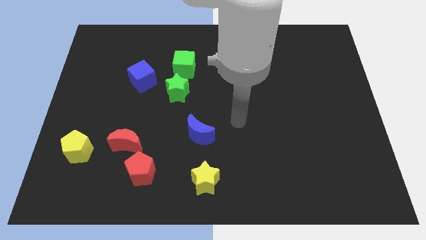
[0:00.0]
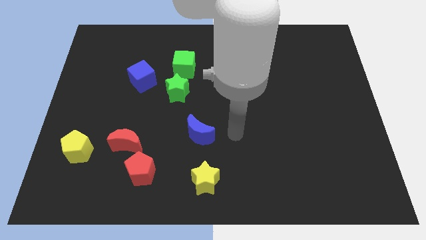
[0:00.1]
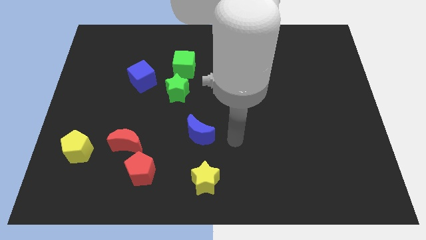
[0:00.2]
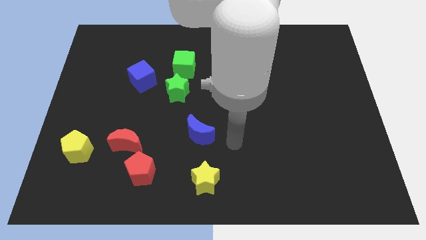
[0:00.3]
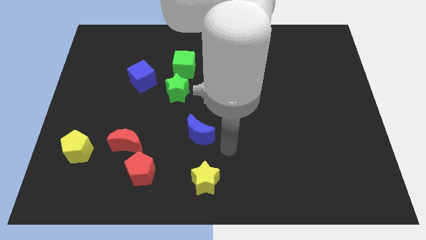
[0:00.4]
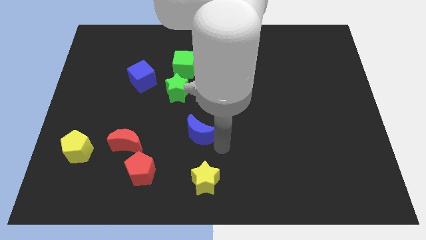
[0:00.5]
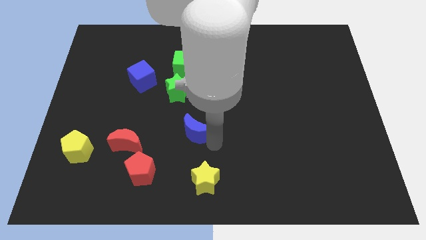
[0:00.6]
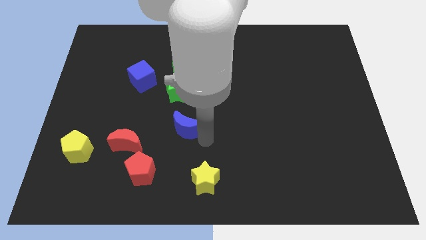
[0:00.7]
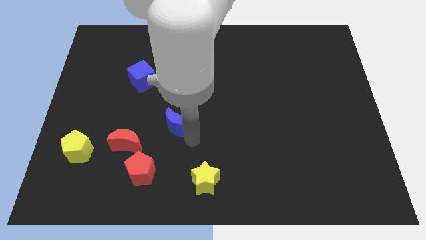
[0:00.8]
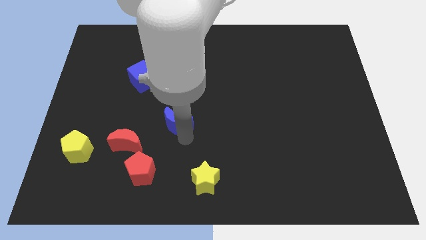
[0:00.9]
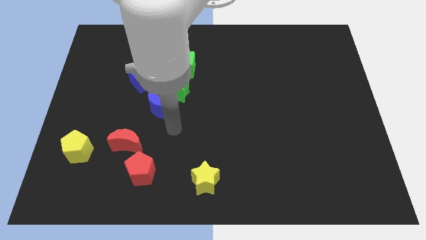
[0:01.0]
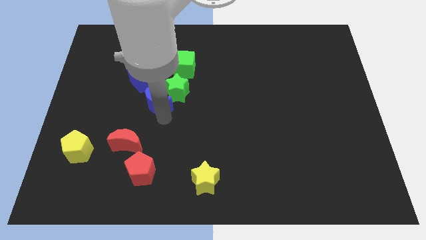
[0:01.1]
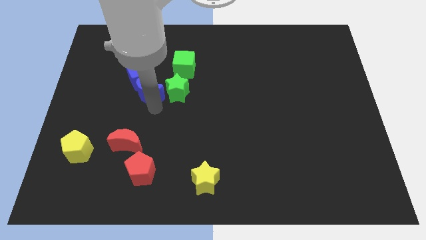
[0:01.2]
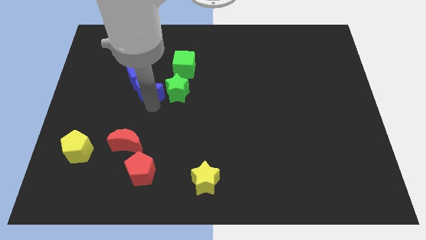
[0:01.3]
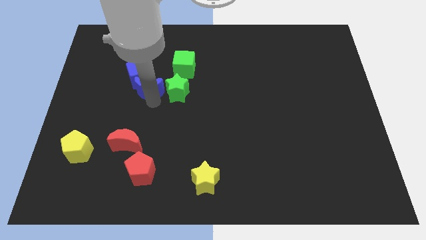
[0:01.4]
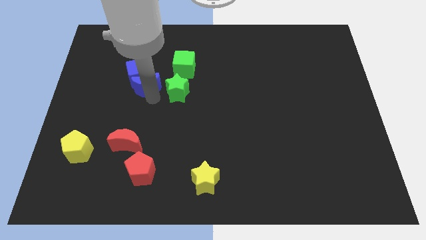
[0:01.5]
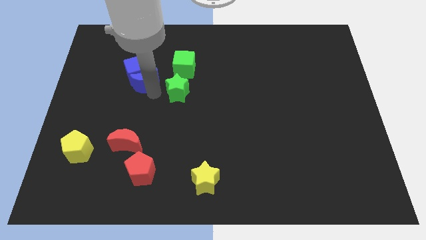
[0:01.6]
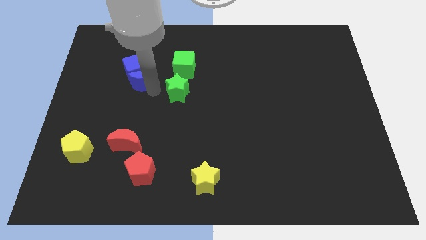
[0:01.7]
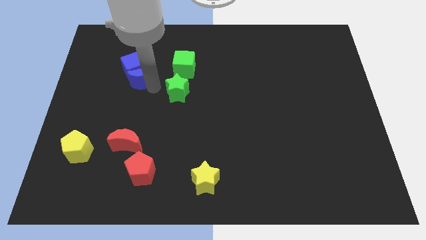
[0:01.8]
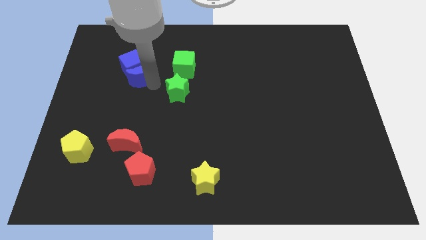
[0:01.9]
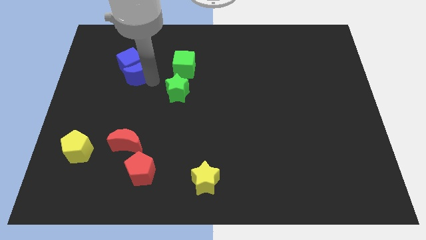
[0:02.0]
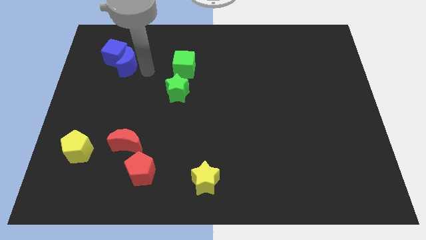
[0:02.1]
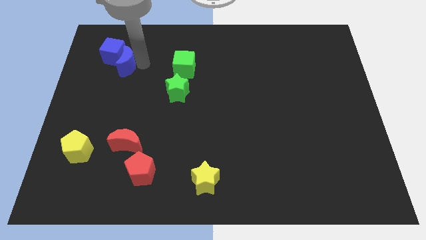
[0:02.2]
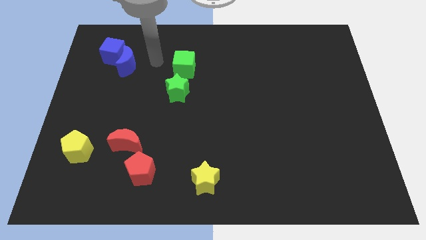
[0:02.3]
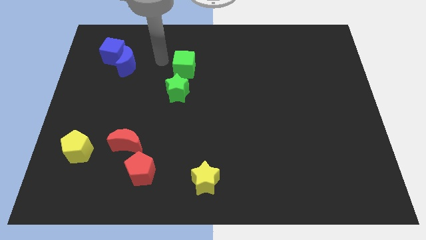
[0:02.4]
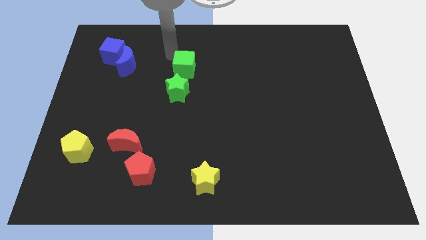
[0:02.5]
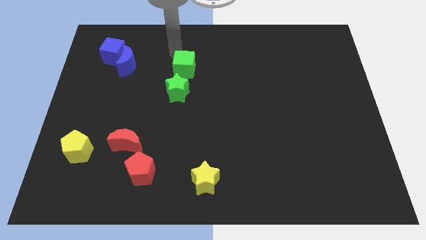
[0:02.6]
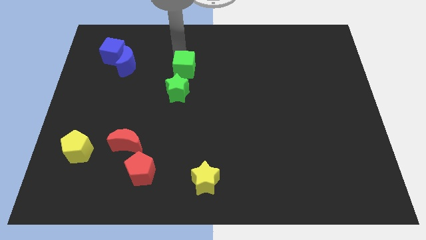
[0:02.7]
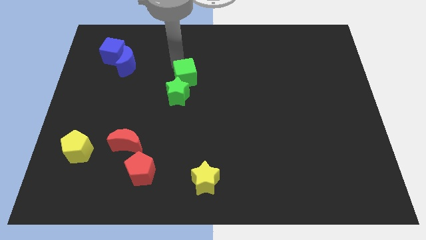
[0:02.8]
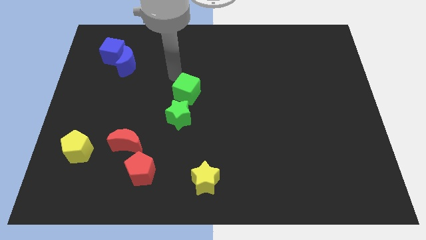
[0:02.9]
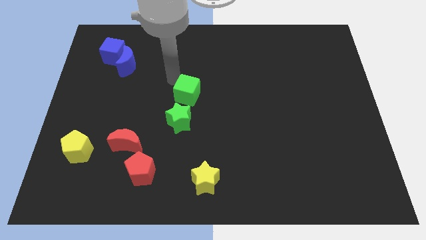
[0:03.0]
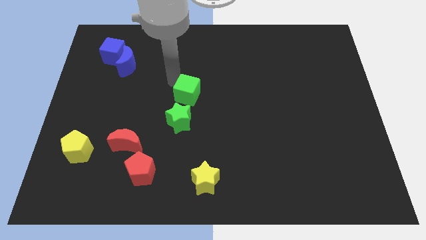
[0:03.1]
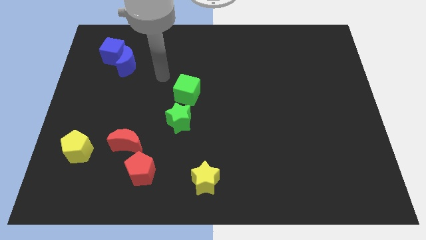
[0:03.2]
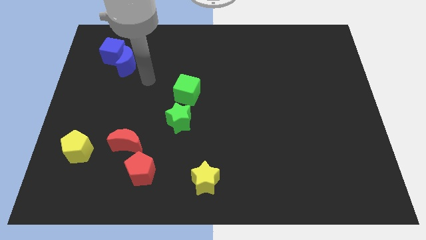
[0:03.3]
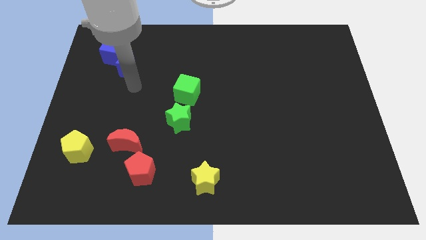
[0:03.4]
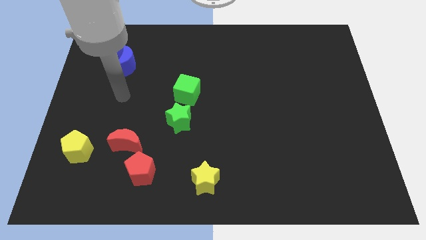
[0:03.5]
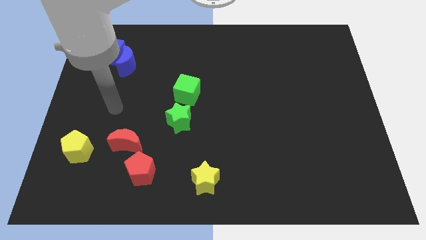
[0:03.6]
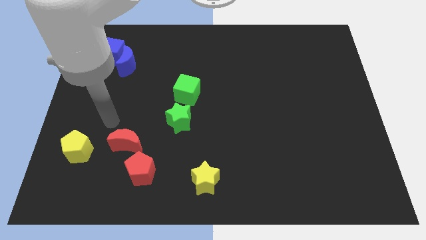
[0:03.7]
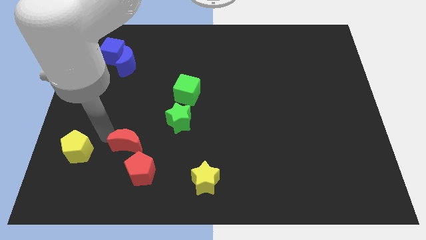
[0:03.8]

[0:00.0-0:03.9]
separate the blue blocks and green blocks from each other

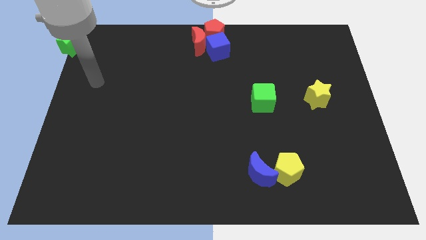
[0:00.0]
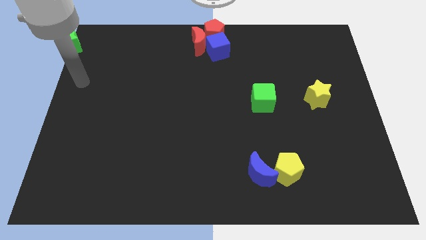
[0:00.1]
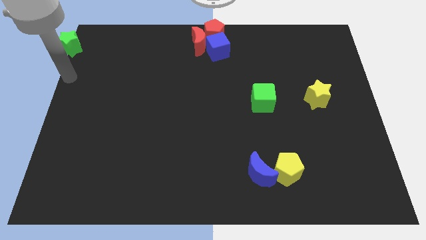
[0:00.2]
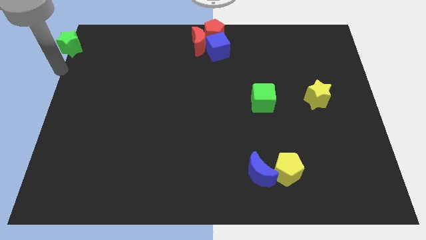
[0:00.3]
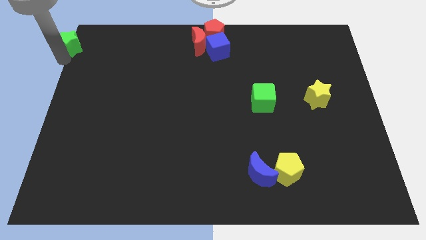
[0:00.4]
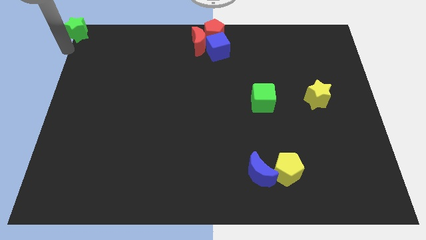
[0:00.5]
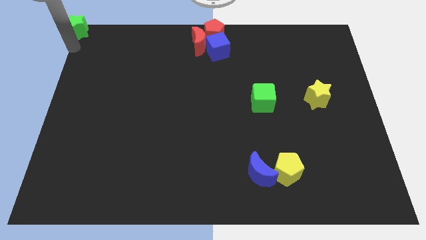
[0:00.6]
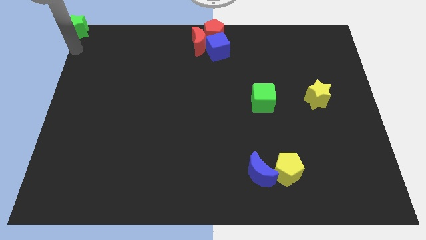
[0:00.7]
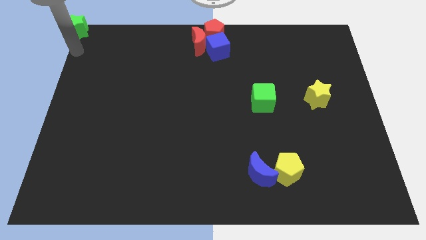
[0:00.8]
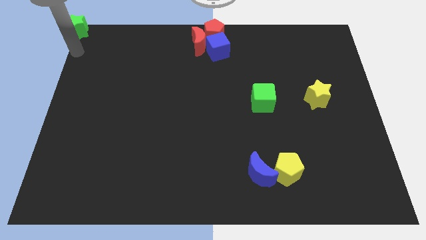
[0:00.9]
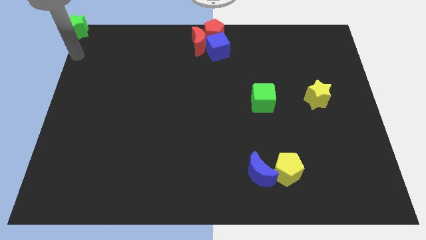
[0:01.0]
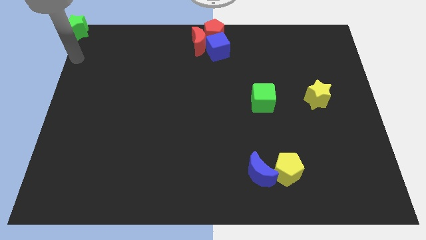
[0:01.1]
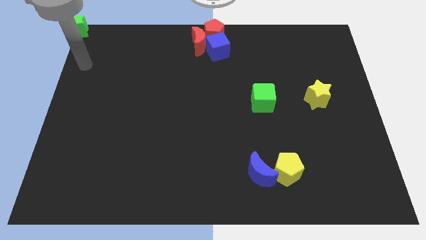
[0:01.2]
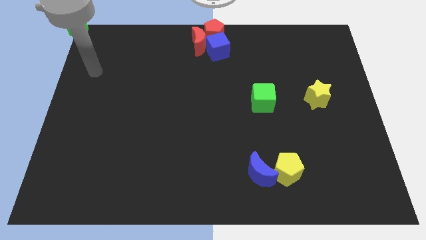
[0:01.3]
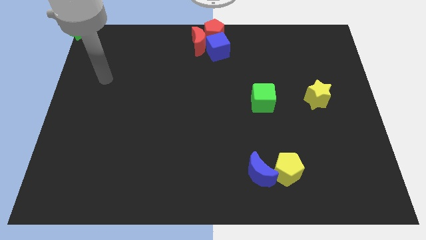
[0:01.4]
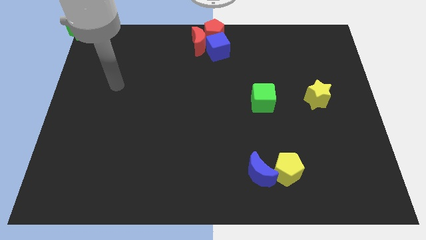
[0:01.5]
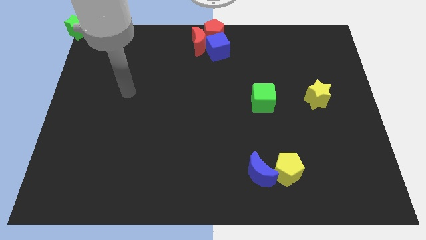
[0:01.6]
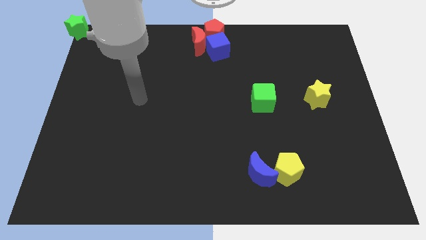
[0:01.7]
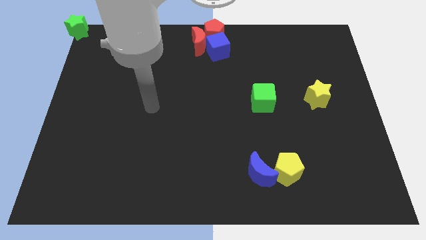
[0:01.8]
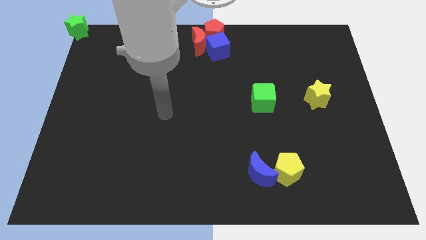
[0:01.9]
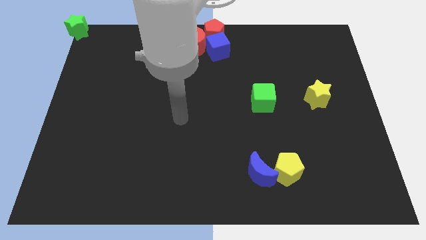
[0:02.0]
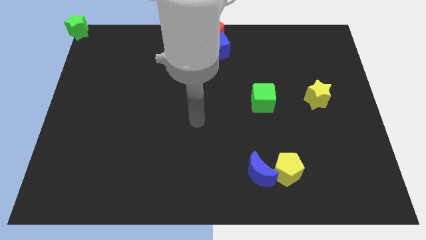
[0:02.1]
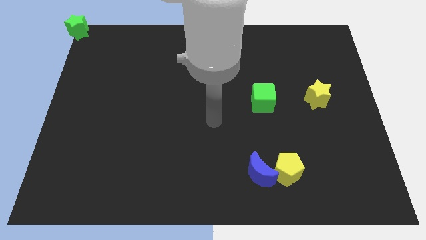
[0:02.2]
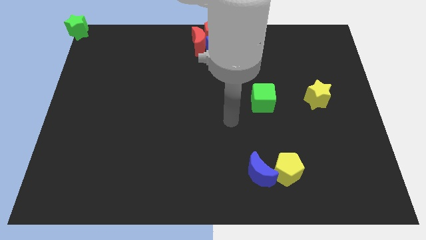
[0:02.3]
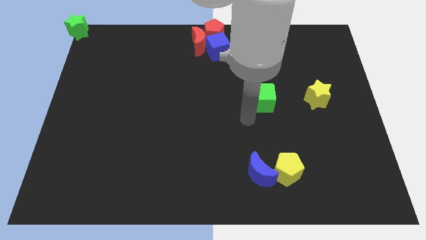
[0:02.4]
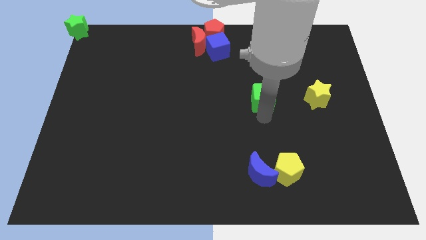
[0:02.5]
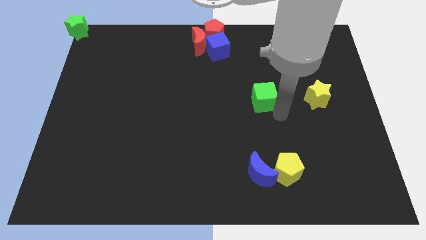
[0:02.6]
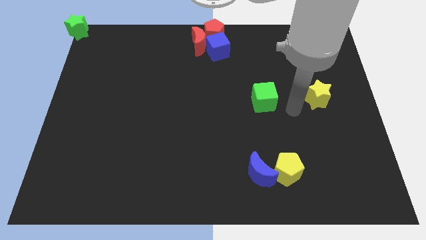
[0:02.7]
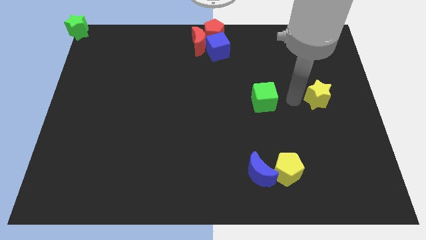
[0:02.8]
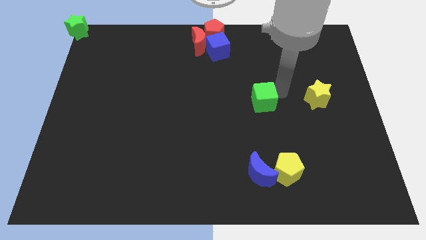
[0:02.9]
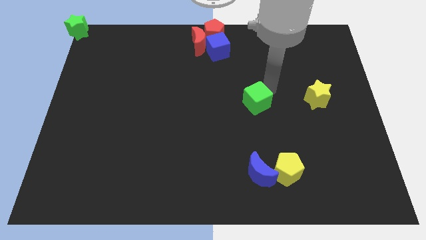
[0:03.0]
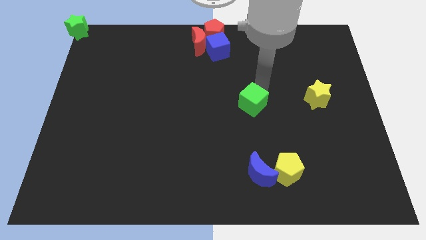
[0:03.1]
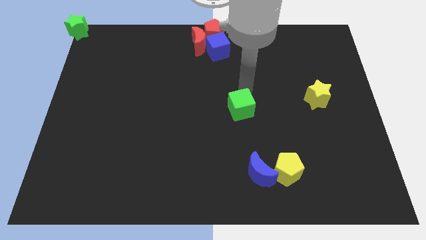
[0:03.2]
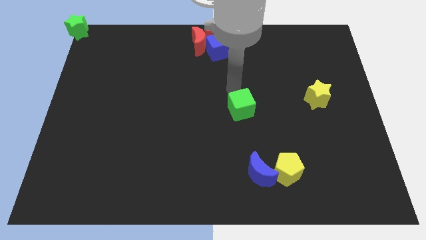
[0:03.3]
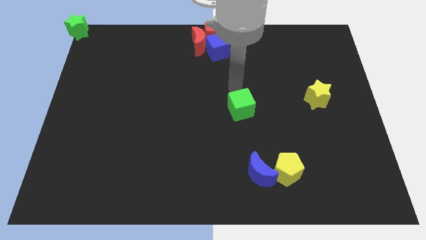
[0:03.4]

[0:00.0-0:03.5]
place the green cube in between the blue cube and the blue crescent

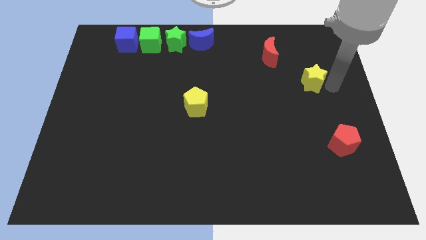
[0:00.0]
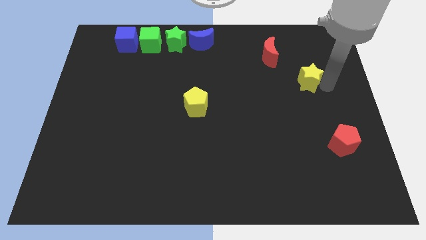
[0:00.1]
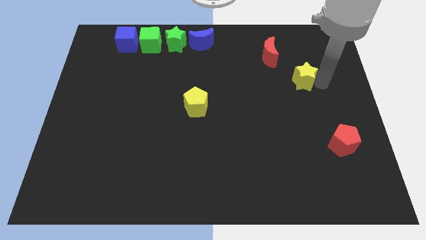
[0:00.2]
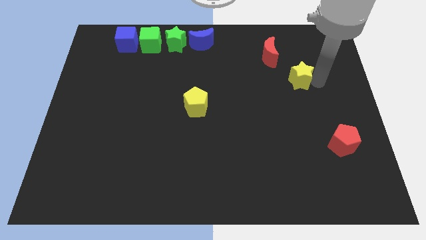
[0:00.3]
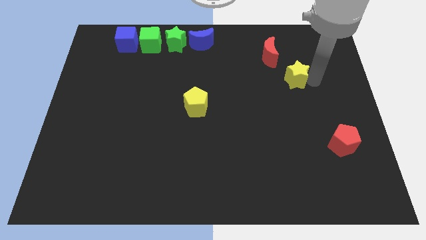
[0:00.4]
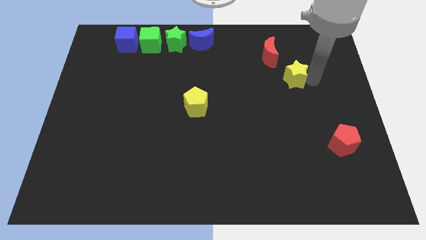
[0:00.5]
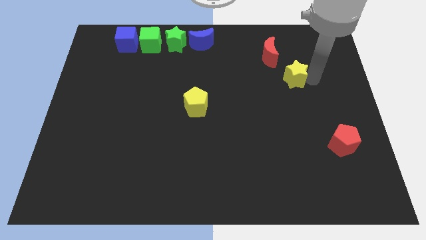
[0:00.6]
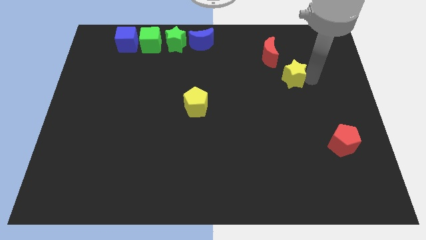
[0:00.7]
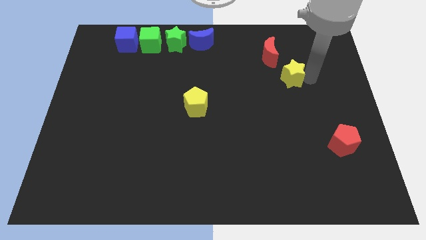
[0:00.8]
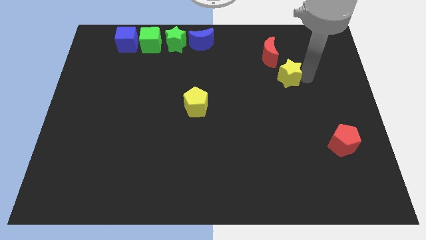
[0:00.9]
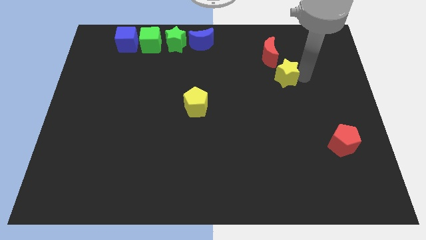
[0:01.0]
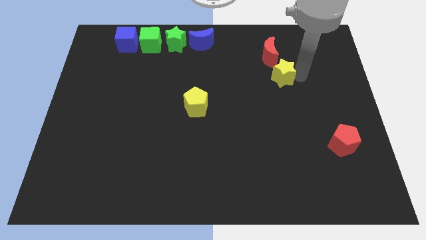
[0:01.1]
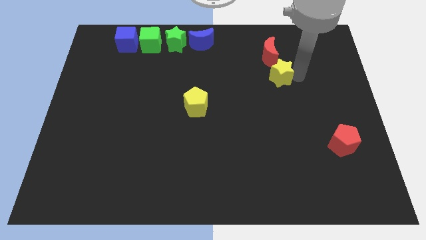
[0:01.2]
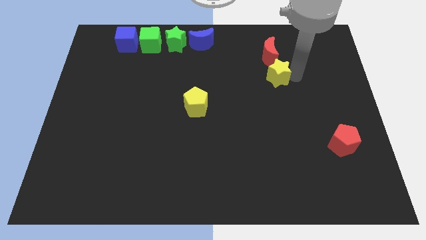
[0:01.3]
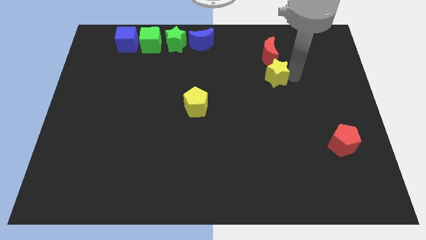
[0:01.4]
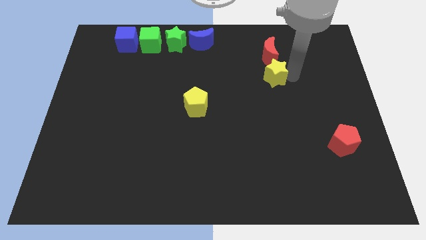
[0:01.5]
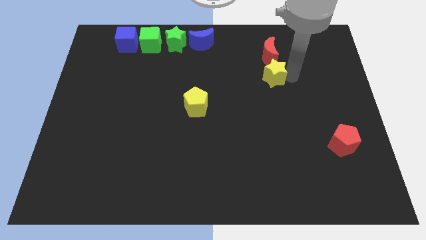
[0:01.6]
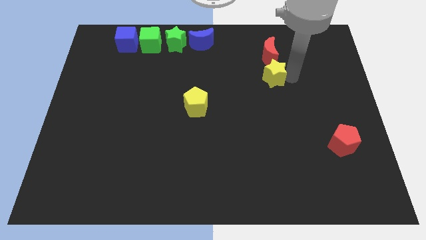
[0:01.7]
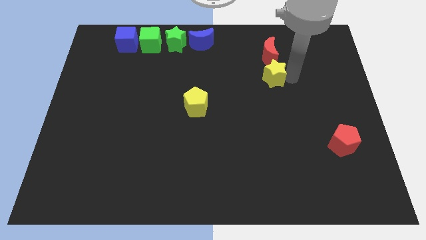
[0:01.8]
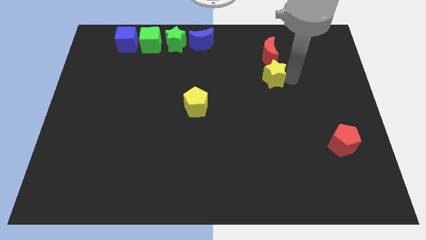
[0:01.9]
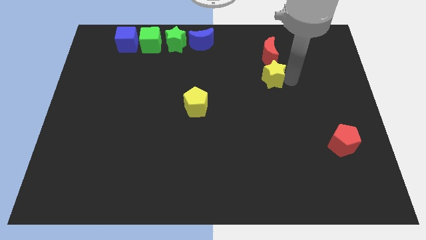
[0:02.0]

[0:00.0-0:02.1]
place yellow star below red moon
